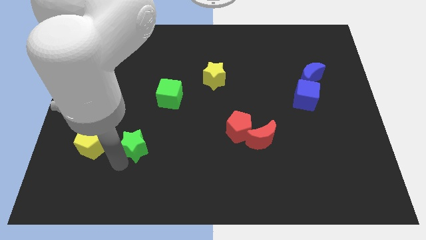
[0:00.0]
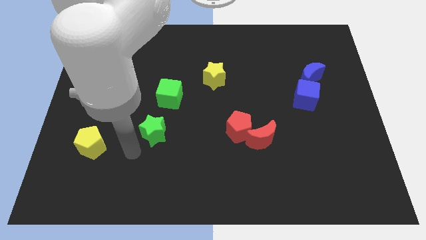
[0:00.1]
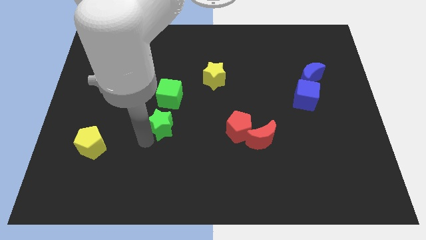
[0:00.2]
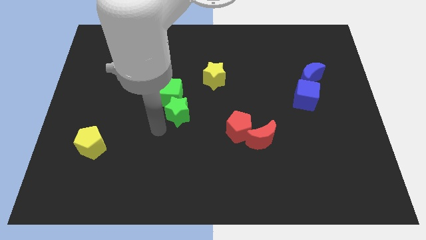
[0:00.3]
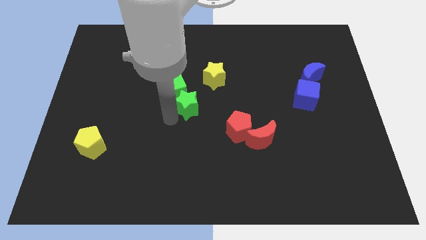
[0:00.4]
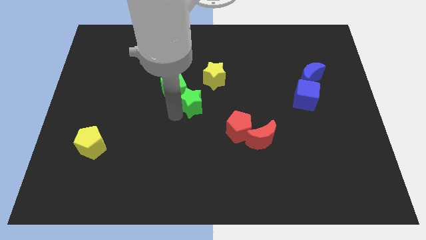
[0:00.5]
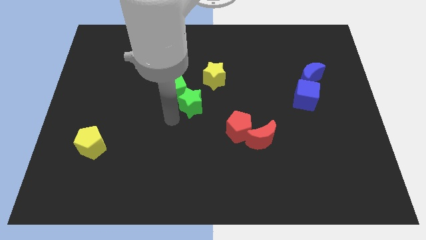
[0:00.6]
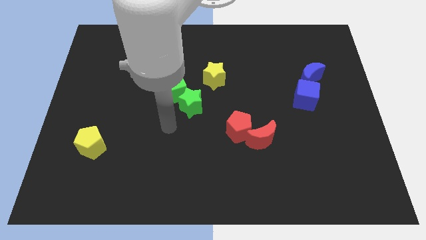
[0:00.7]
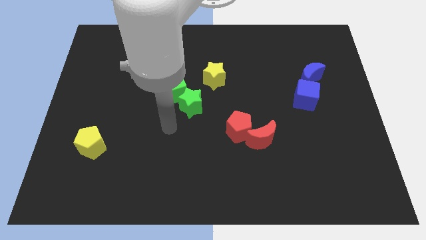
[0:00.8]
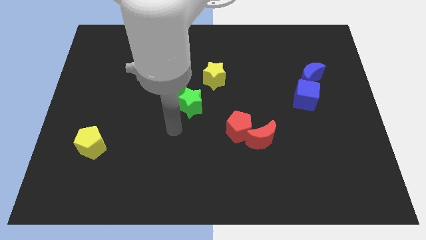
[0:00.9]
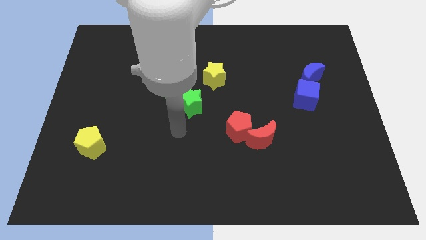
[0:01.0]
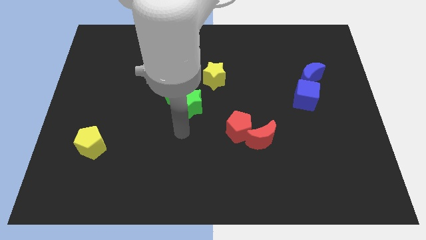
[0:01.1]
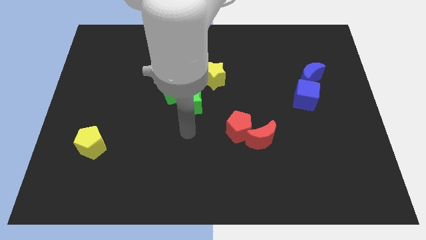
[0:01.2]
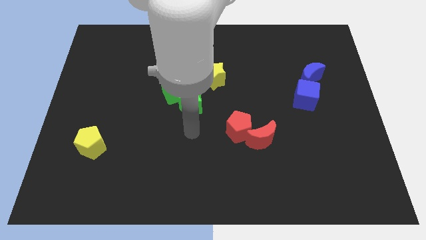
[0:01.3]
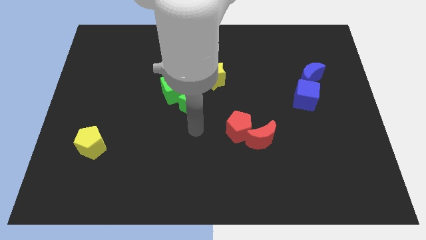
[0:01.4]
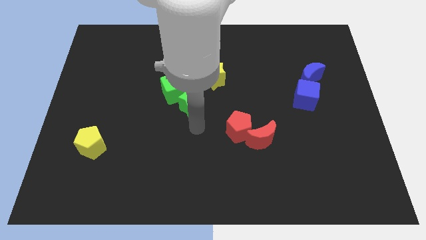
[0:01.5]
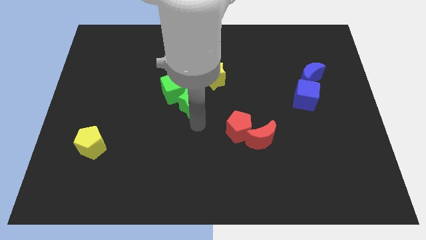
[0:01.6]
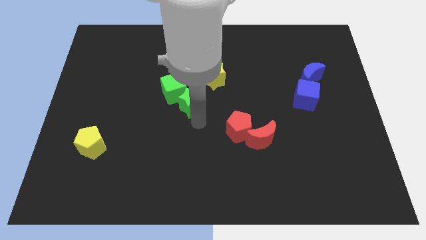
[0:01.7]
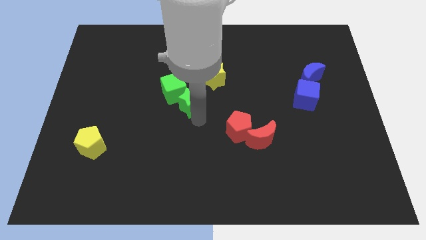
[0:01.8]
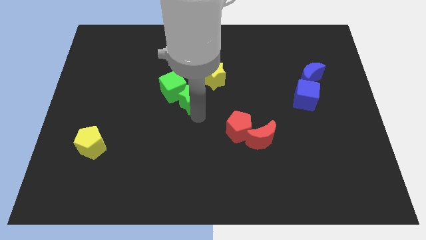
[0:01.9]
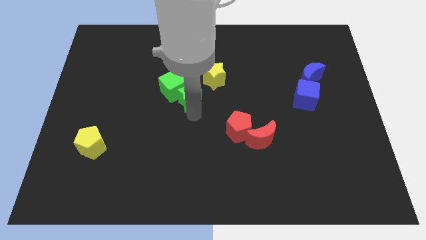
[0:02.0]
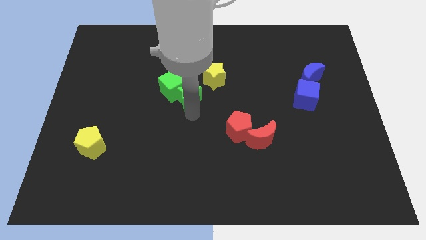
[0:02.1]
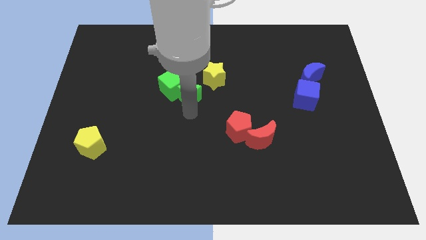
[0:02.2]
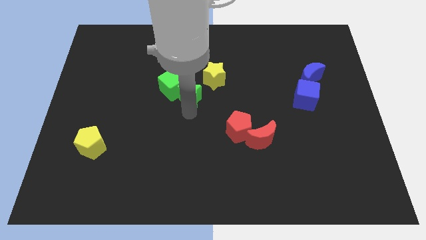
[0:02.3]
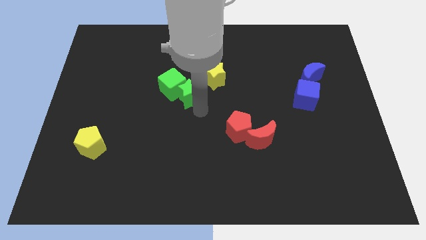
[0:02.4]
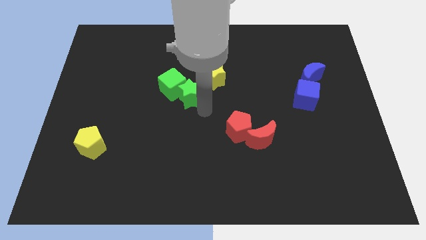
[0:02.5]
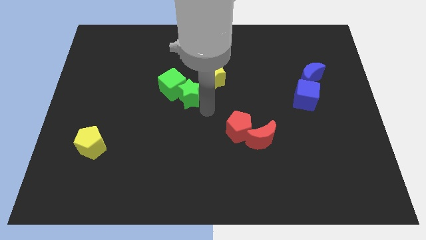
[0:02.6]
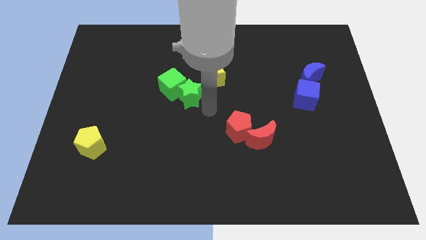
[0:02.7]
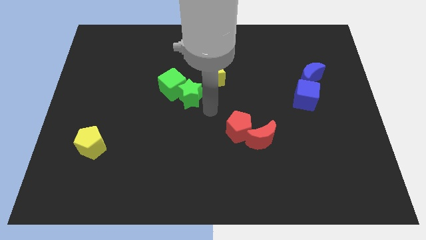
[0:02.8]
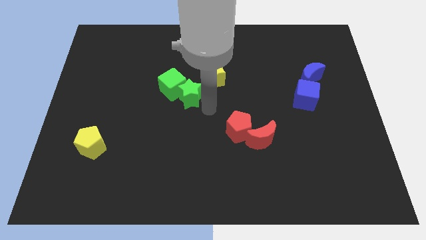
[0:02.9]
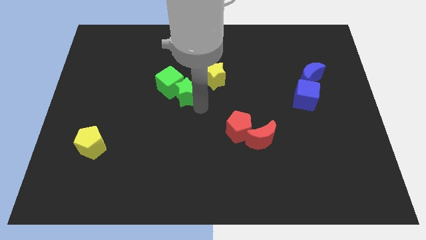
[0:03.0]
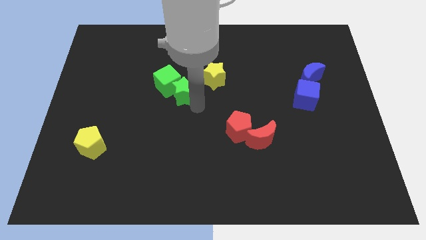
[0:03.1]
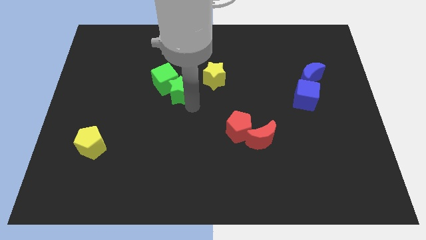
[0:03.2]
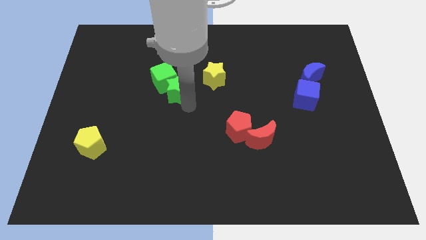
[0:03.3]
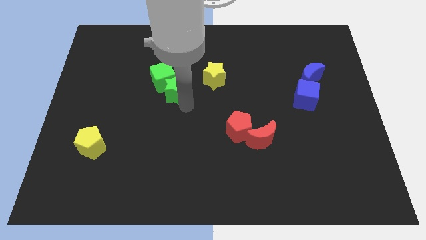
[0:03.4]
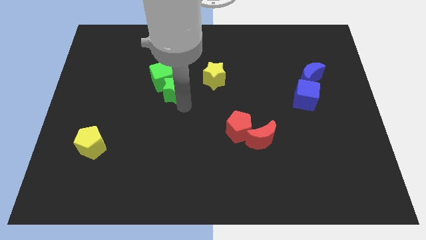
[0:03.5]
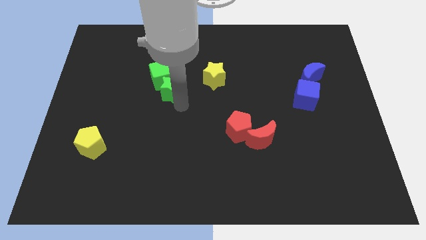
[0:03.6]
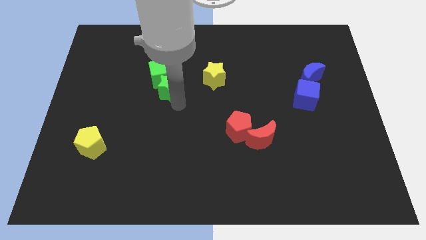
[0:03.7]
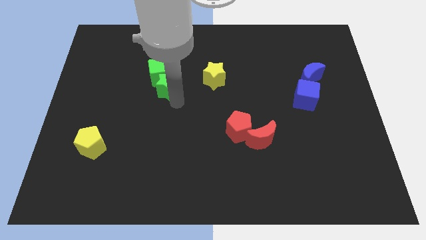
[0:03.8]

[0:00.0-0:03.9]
push the green blocks together to the left side of the yellow star

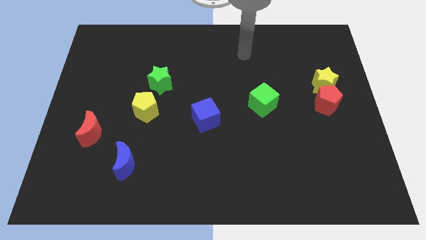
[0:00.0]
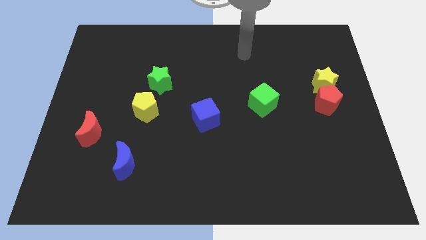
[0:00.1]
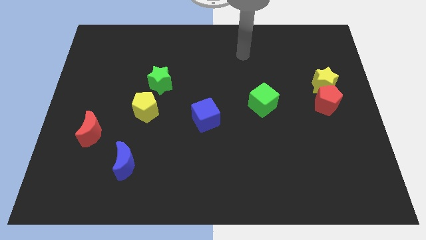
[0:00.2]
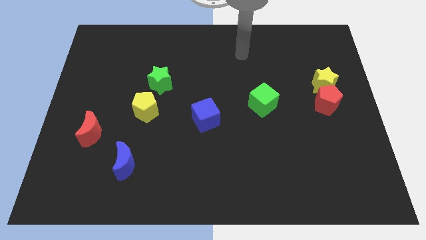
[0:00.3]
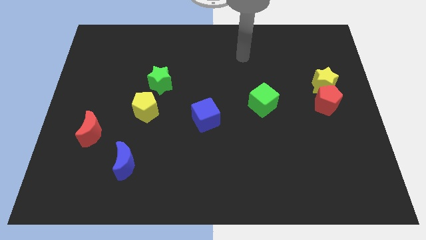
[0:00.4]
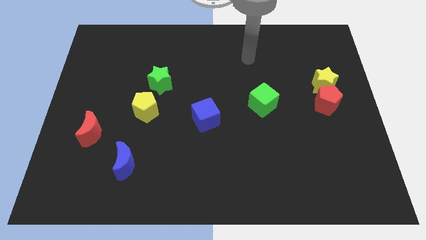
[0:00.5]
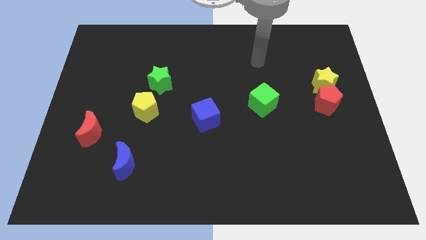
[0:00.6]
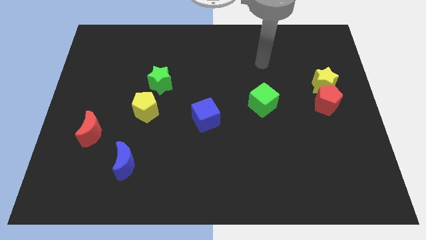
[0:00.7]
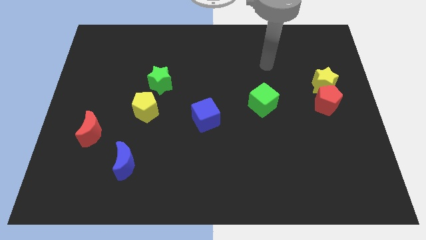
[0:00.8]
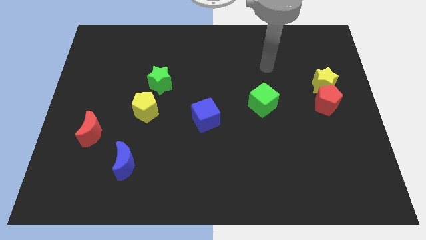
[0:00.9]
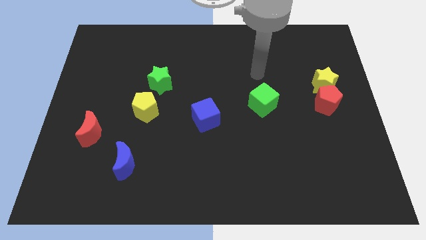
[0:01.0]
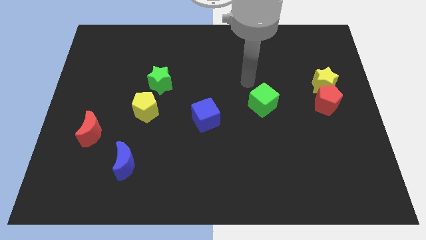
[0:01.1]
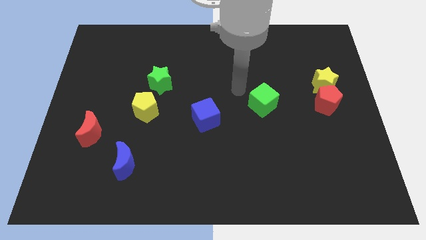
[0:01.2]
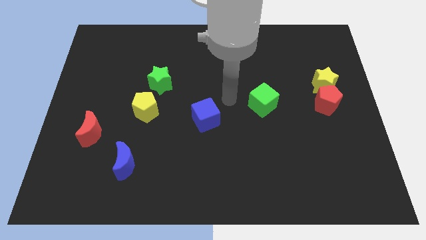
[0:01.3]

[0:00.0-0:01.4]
point your hand left to the green cube

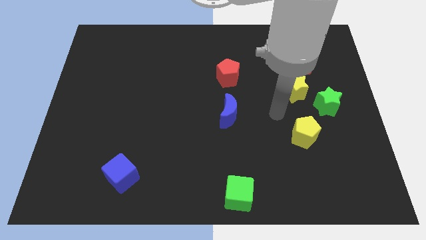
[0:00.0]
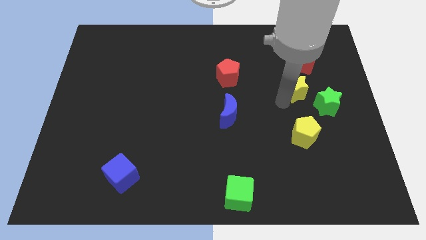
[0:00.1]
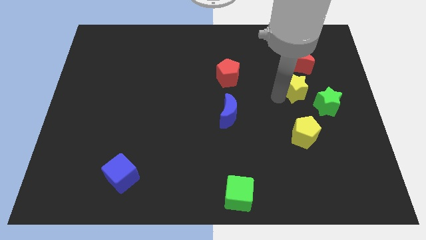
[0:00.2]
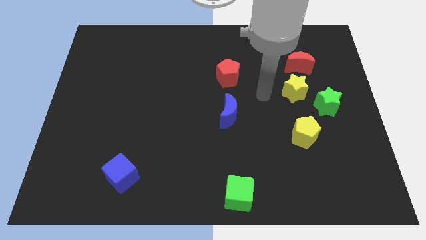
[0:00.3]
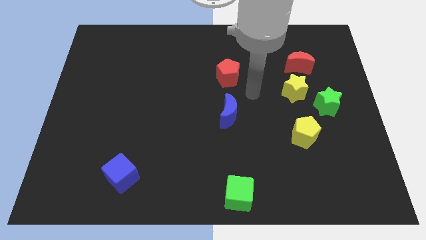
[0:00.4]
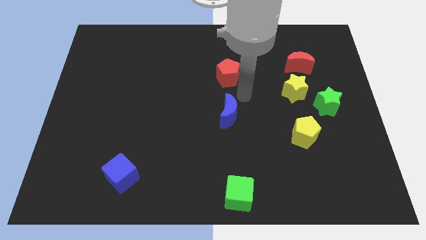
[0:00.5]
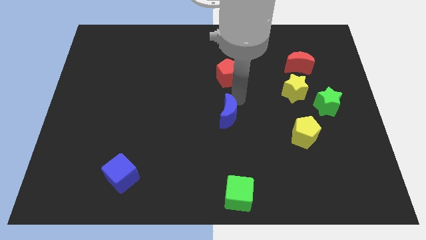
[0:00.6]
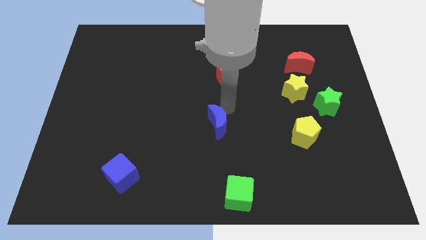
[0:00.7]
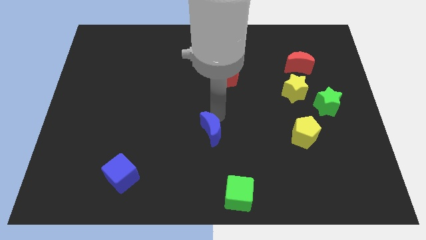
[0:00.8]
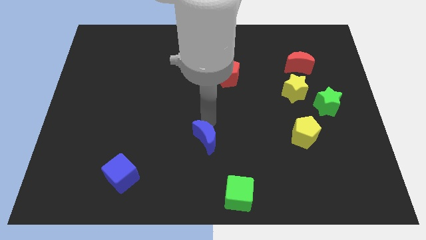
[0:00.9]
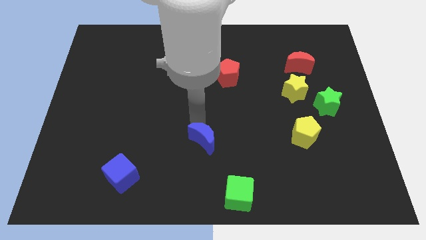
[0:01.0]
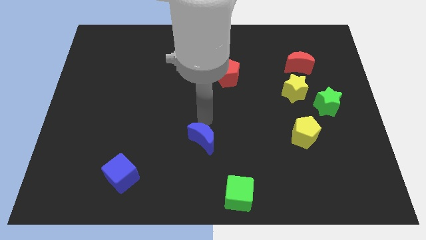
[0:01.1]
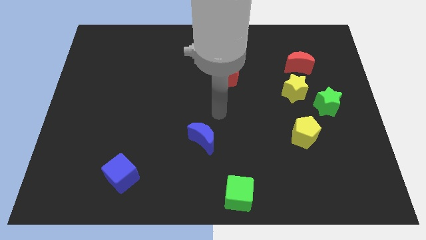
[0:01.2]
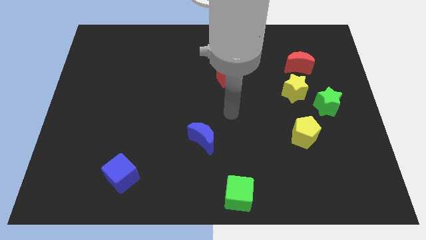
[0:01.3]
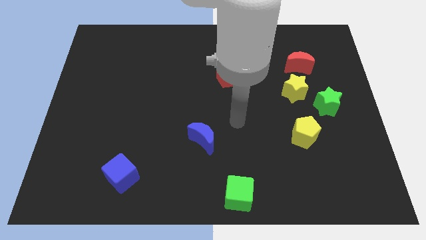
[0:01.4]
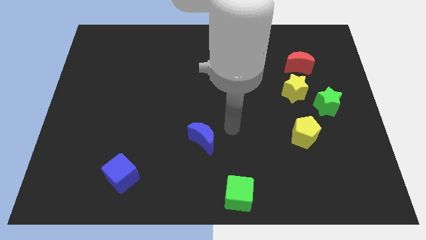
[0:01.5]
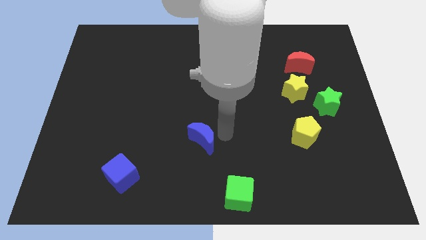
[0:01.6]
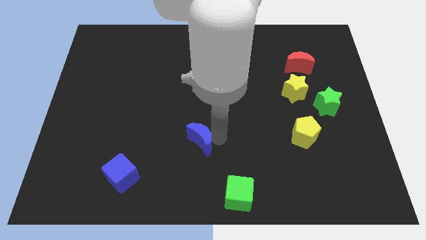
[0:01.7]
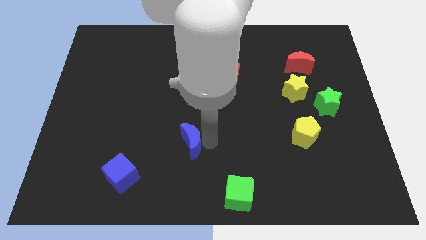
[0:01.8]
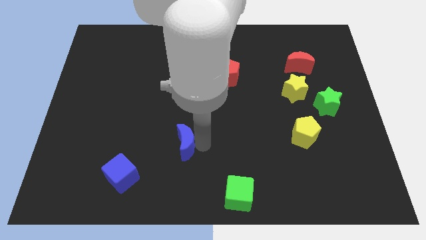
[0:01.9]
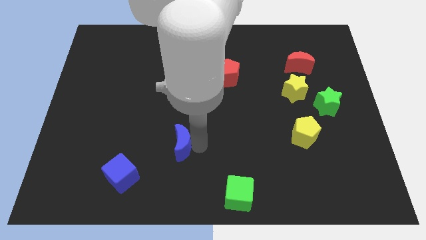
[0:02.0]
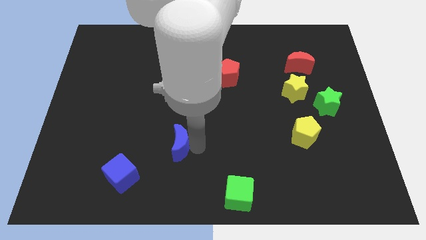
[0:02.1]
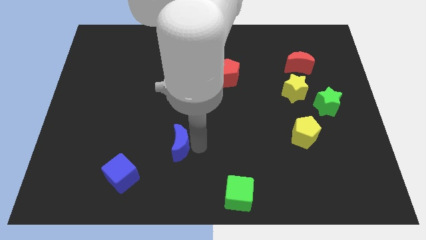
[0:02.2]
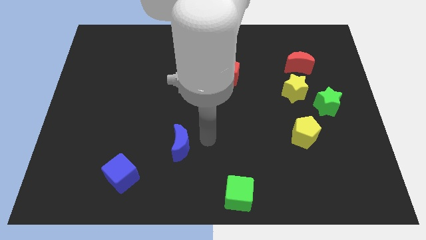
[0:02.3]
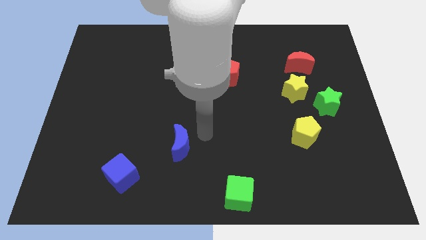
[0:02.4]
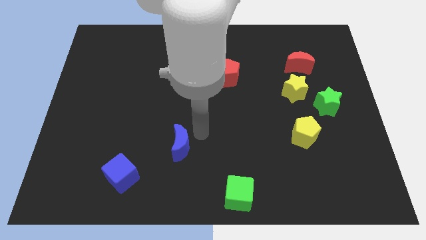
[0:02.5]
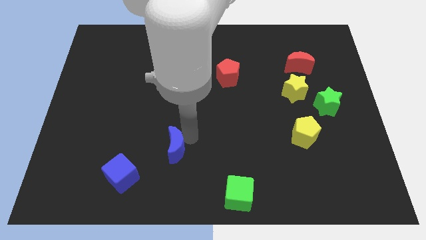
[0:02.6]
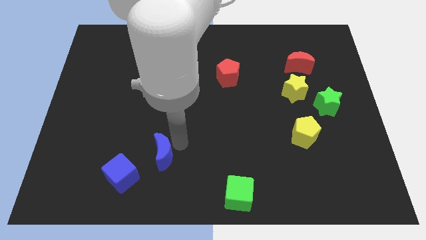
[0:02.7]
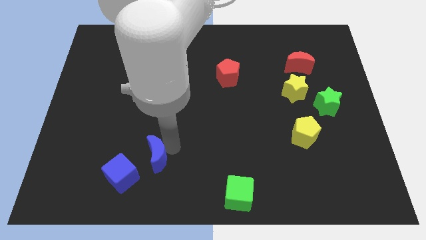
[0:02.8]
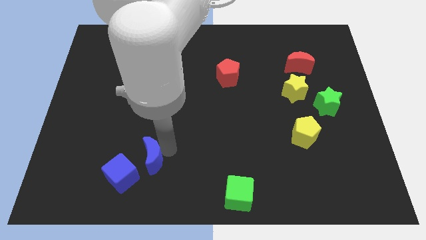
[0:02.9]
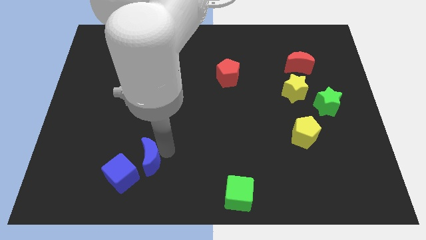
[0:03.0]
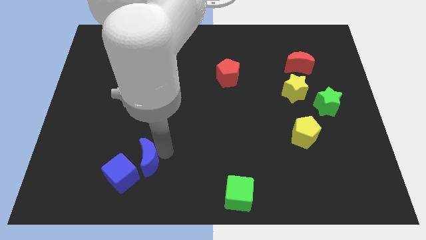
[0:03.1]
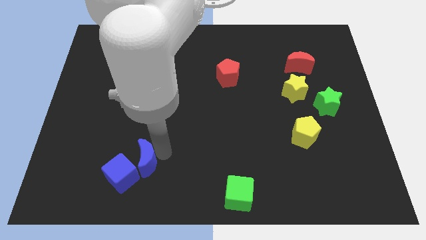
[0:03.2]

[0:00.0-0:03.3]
move the blue moon closely to the blue cube

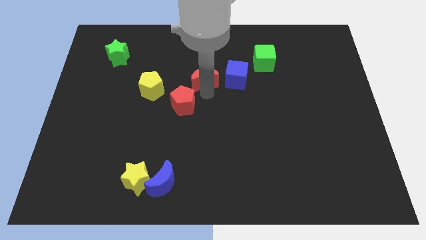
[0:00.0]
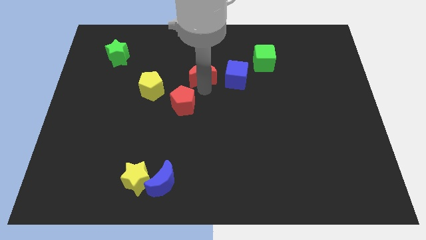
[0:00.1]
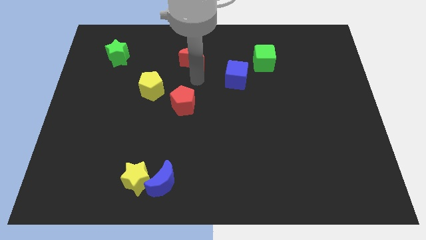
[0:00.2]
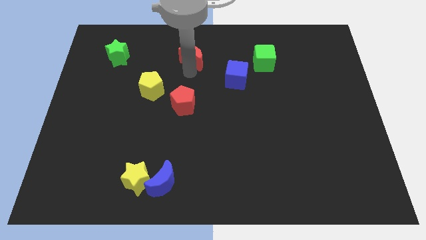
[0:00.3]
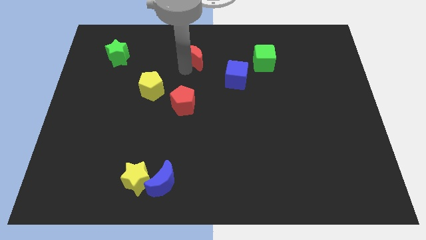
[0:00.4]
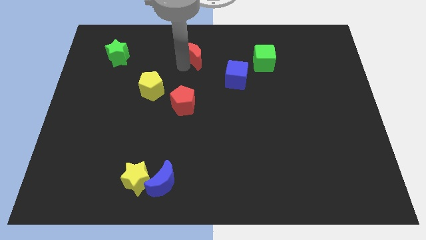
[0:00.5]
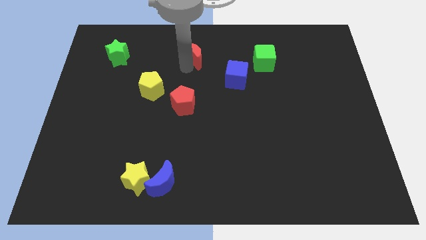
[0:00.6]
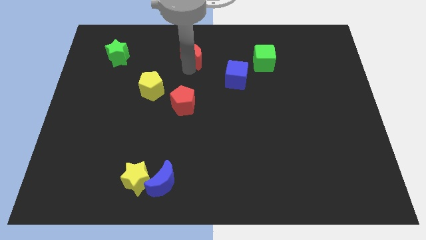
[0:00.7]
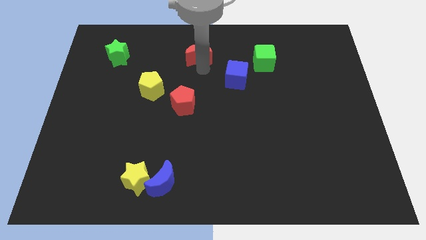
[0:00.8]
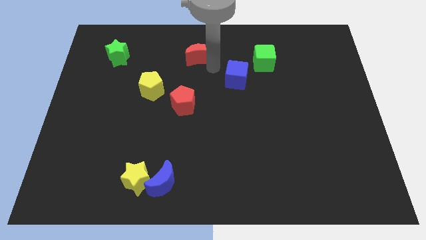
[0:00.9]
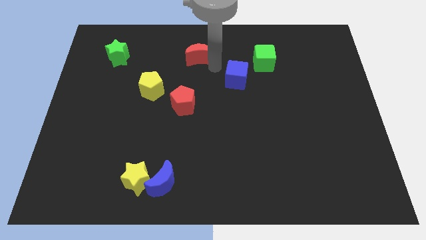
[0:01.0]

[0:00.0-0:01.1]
push red moon towards top center
